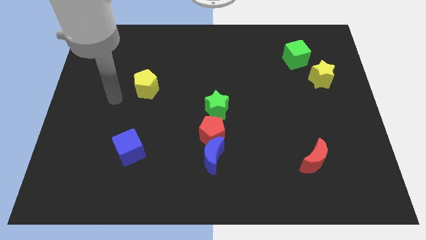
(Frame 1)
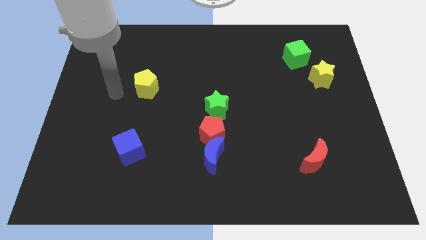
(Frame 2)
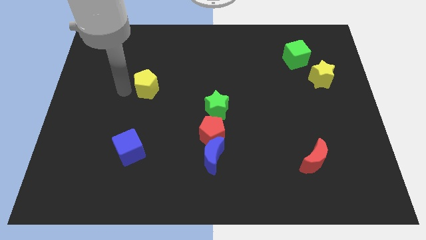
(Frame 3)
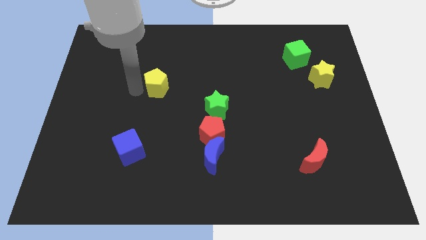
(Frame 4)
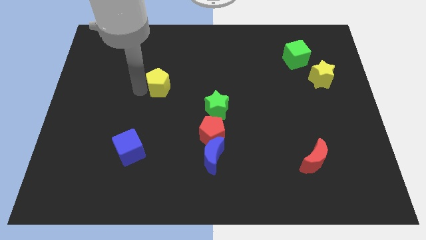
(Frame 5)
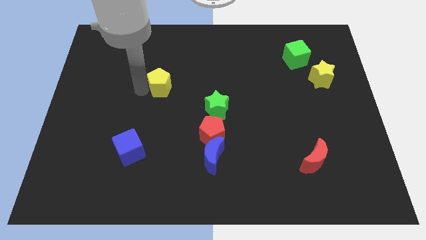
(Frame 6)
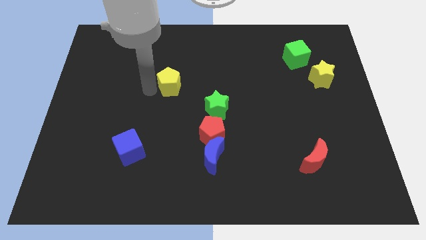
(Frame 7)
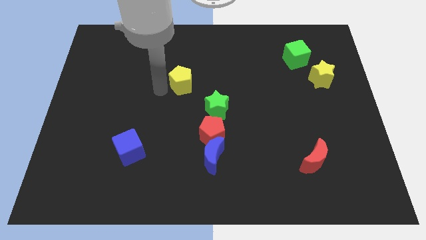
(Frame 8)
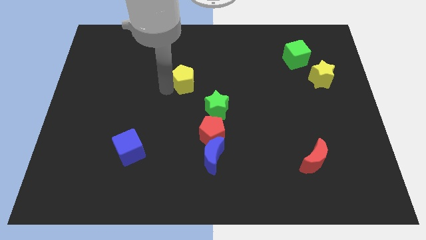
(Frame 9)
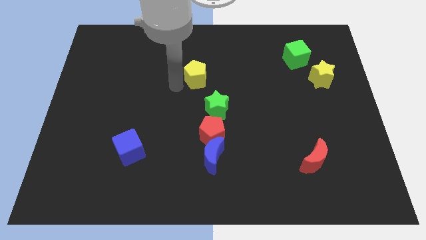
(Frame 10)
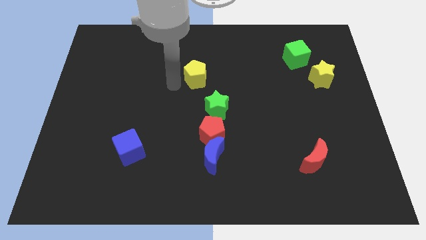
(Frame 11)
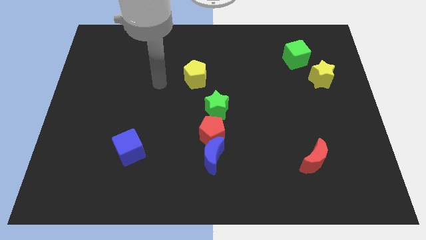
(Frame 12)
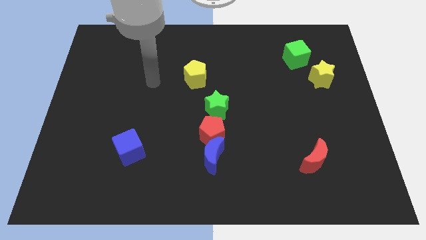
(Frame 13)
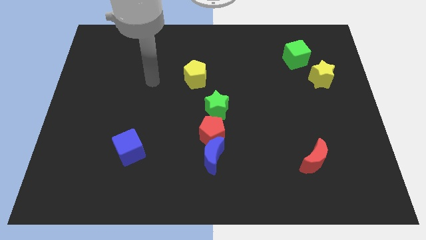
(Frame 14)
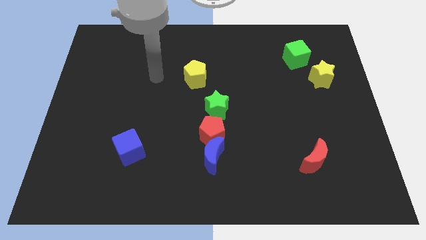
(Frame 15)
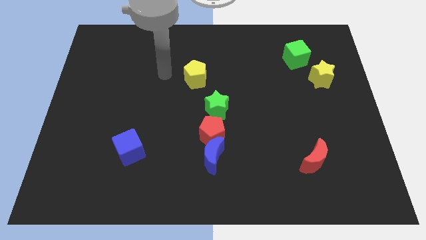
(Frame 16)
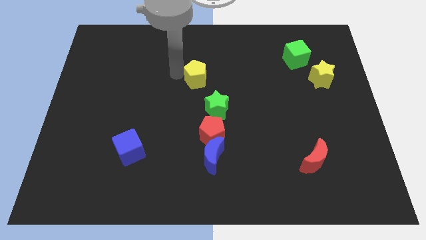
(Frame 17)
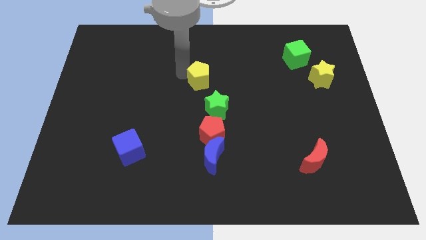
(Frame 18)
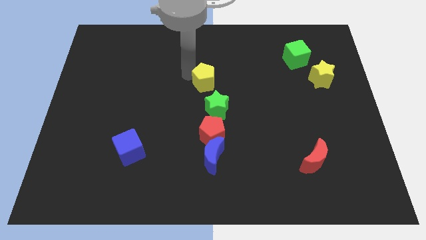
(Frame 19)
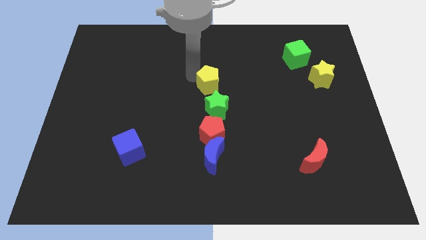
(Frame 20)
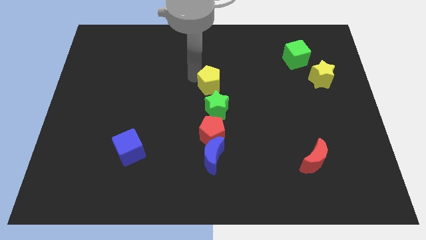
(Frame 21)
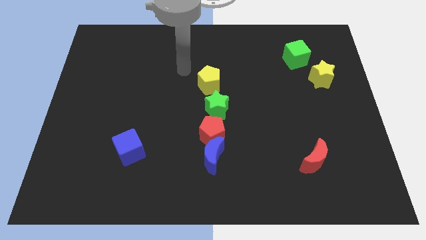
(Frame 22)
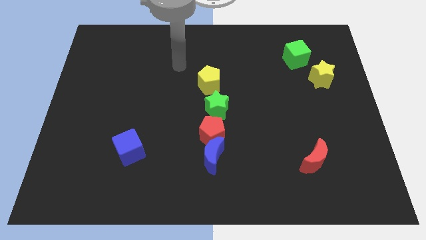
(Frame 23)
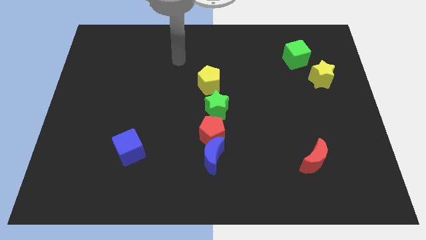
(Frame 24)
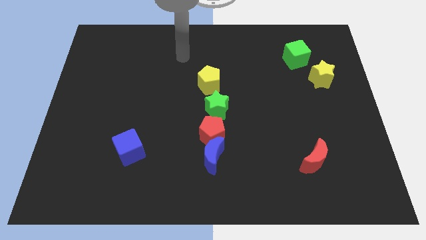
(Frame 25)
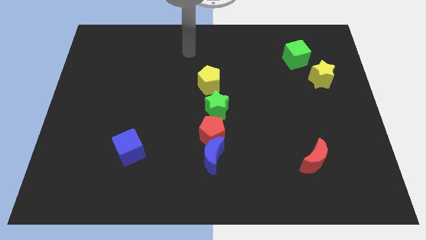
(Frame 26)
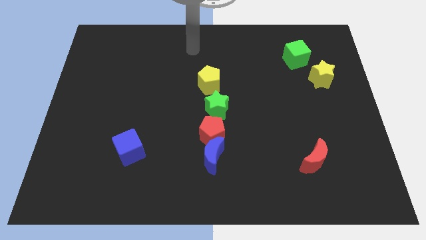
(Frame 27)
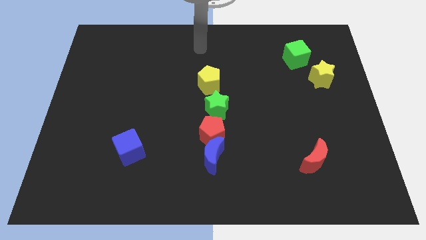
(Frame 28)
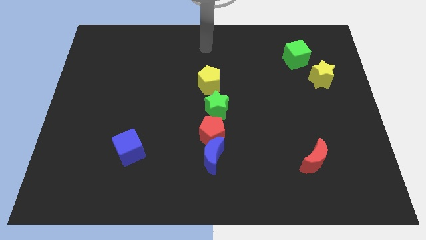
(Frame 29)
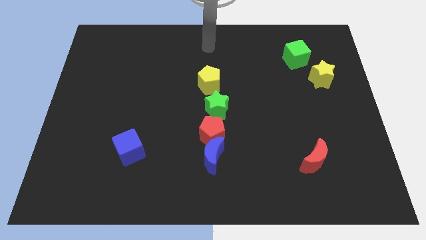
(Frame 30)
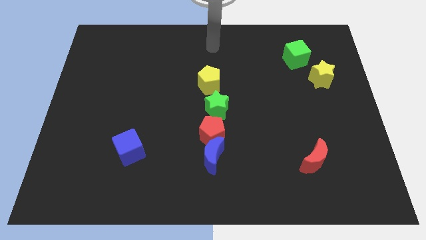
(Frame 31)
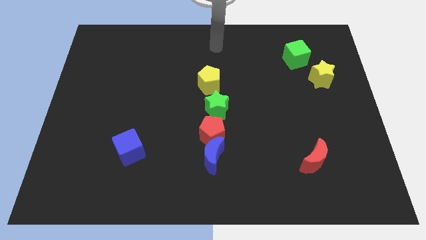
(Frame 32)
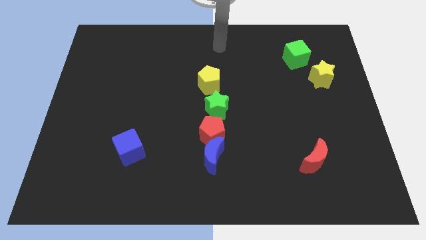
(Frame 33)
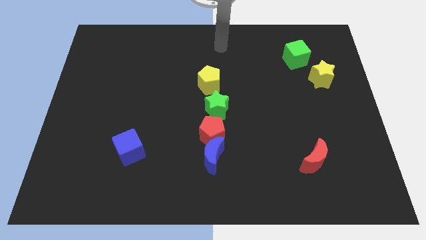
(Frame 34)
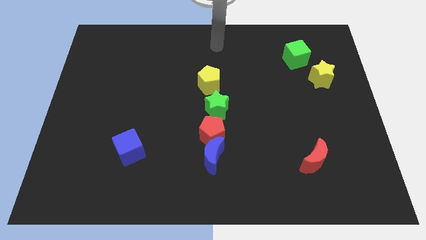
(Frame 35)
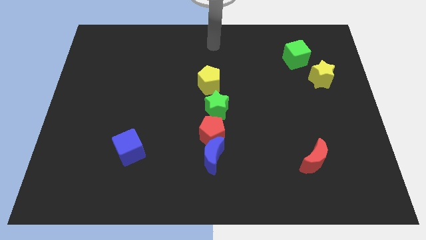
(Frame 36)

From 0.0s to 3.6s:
put yellow pentagon above green star

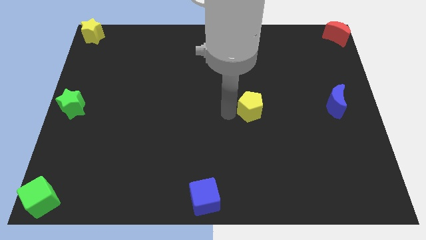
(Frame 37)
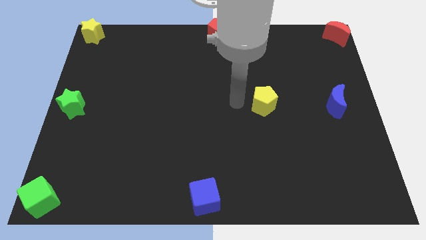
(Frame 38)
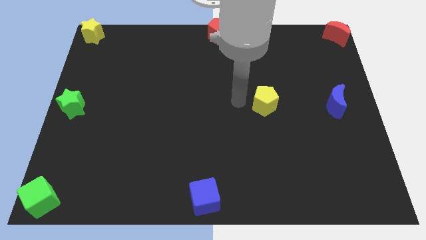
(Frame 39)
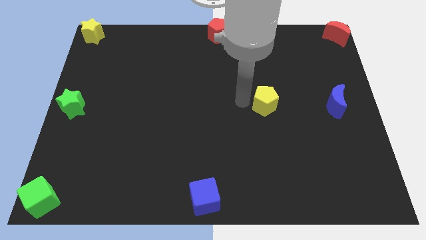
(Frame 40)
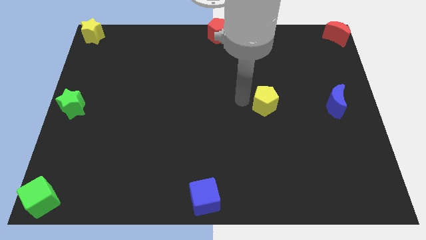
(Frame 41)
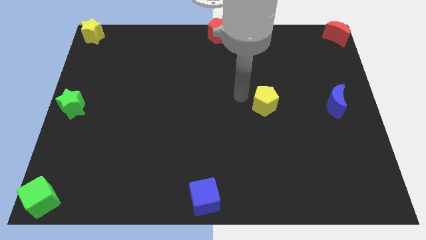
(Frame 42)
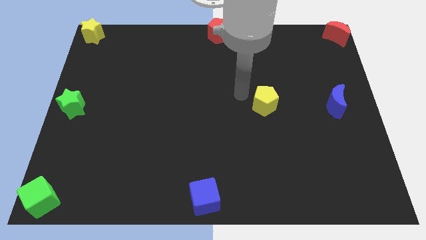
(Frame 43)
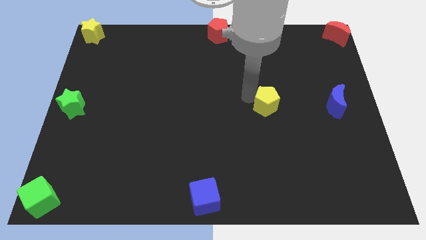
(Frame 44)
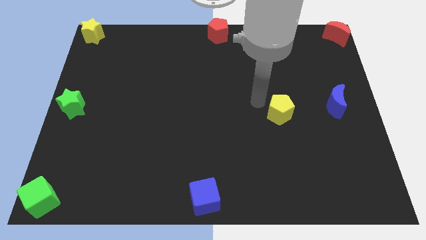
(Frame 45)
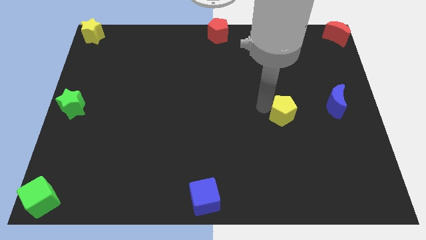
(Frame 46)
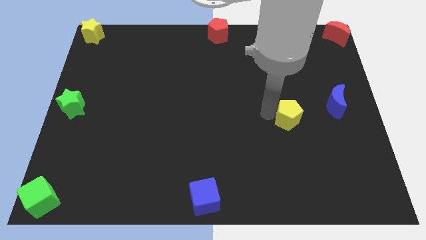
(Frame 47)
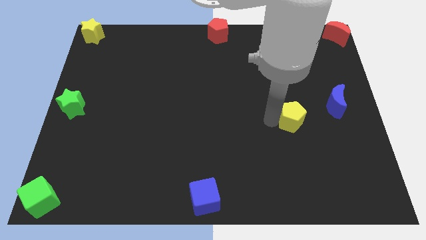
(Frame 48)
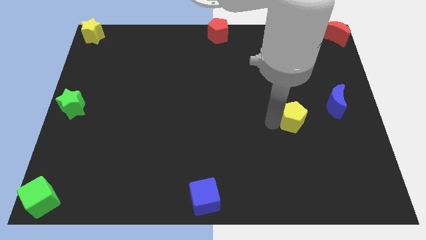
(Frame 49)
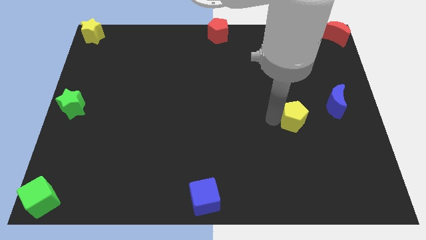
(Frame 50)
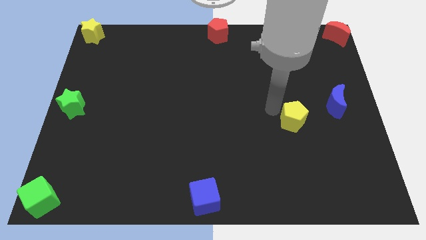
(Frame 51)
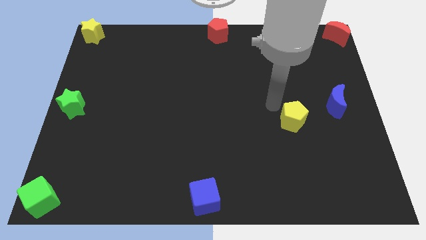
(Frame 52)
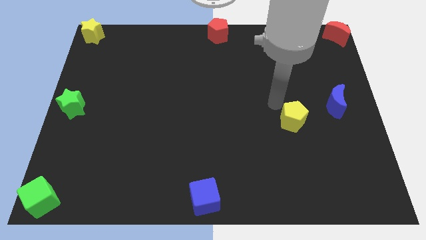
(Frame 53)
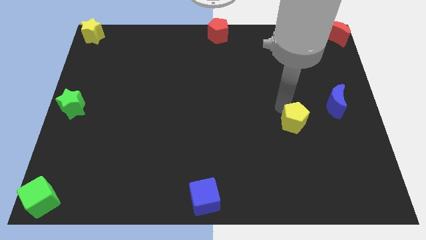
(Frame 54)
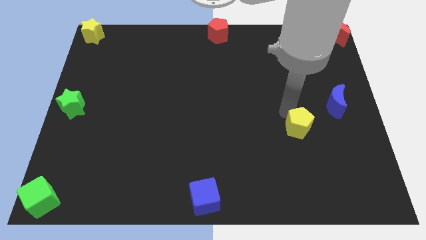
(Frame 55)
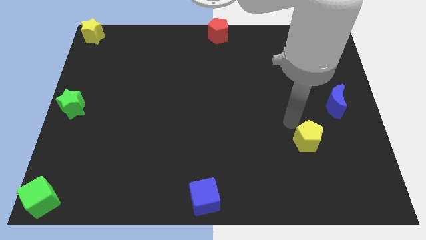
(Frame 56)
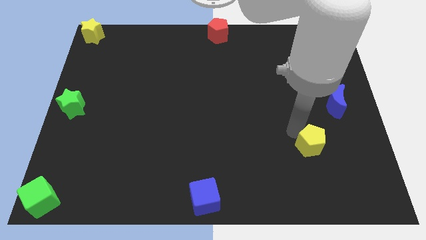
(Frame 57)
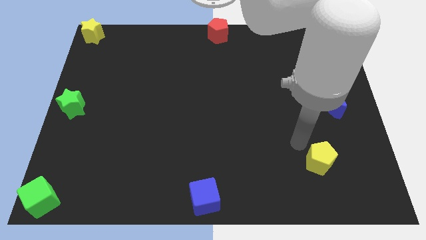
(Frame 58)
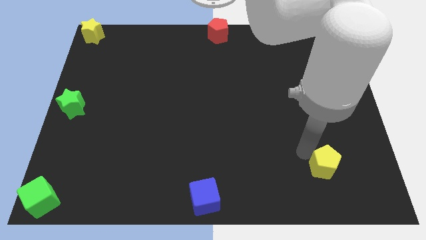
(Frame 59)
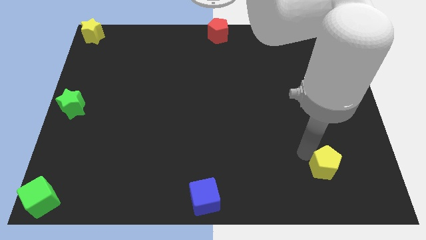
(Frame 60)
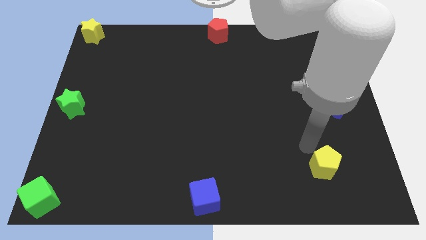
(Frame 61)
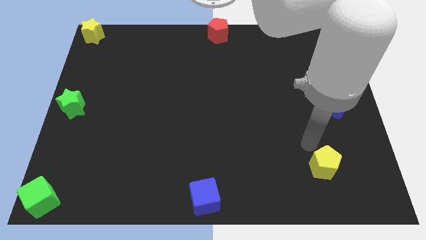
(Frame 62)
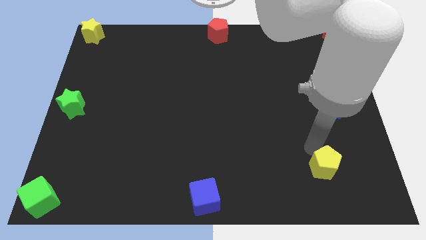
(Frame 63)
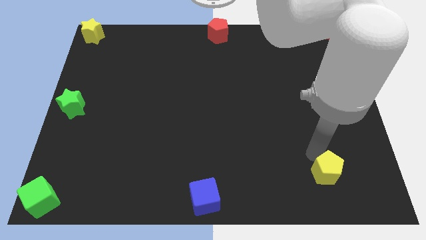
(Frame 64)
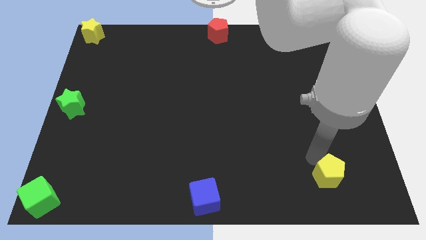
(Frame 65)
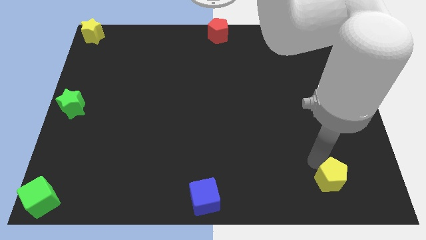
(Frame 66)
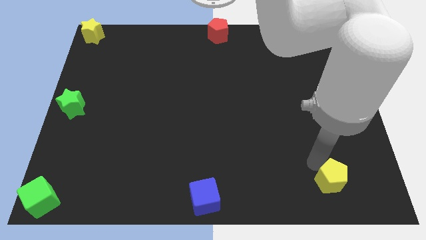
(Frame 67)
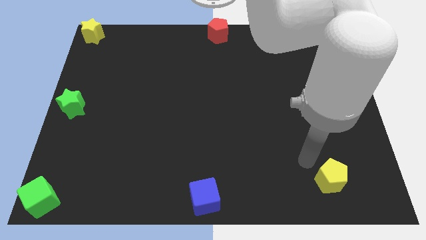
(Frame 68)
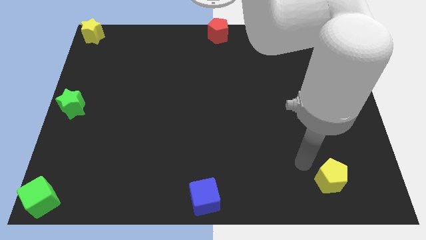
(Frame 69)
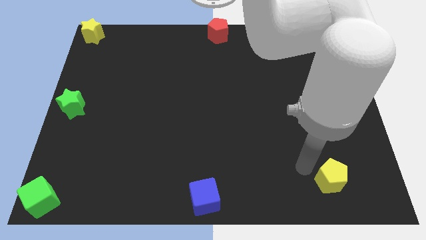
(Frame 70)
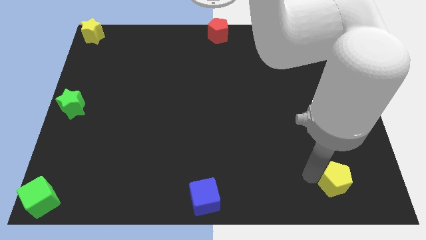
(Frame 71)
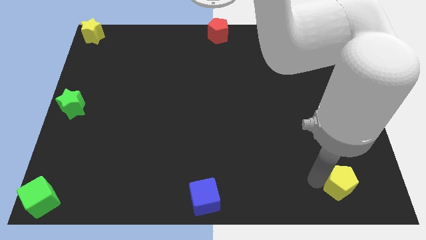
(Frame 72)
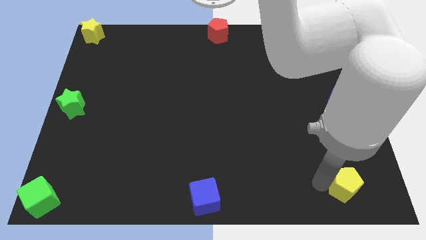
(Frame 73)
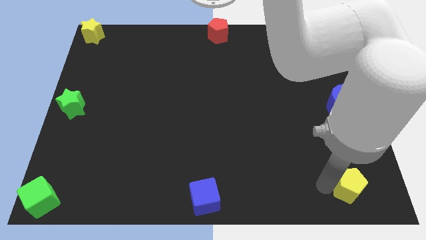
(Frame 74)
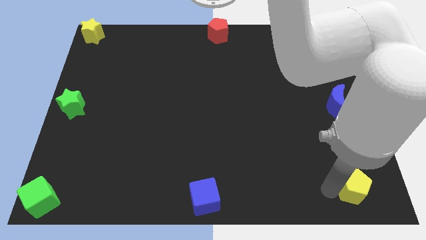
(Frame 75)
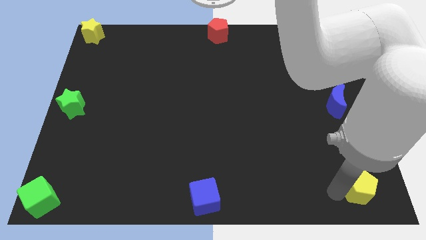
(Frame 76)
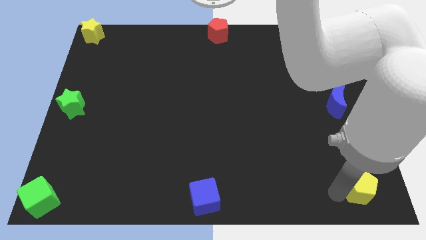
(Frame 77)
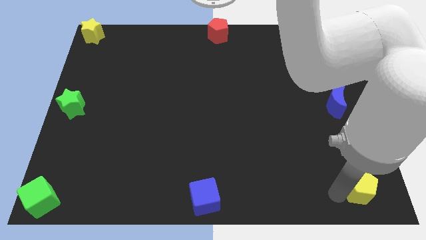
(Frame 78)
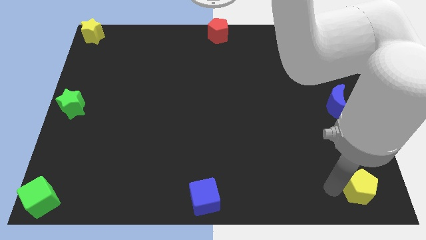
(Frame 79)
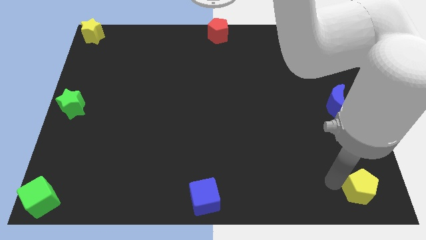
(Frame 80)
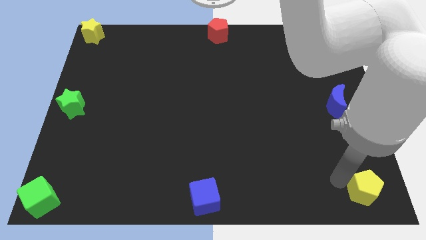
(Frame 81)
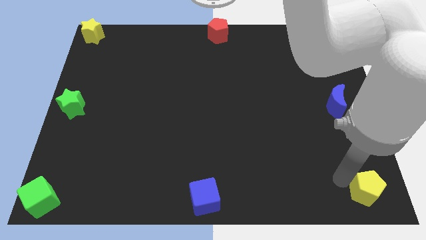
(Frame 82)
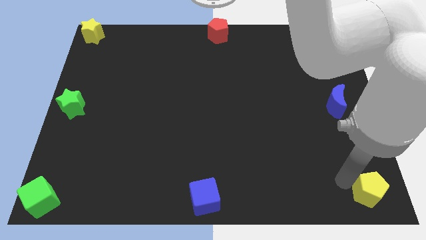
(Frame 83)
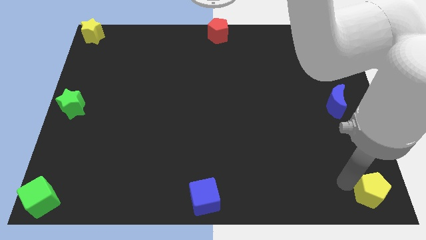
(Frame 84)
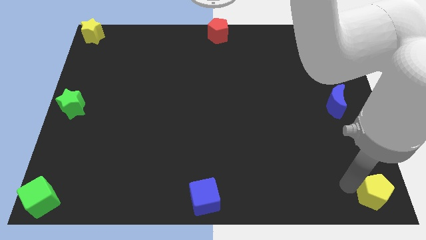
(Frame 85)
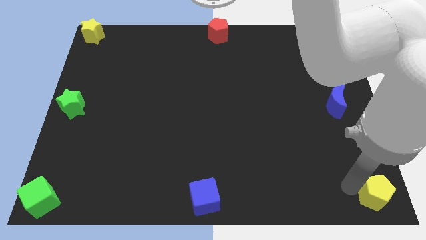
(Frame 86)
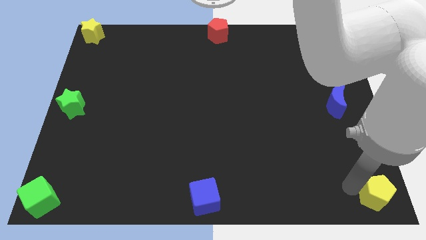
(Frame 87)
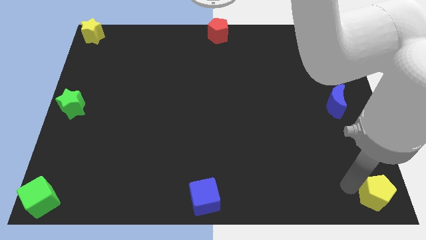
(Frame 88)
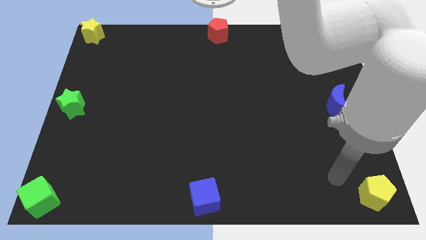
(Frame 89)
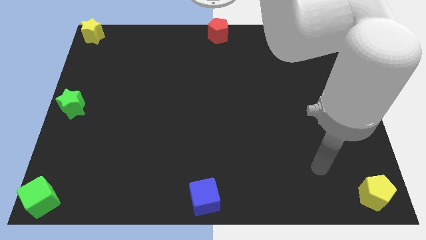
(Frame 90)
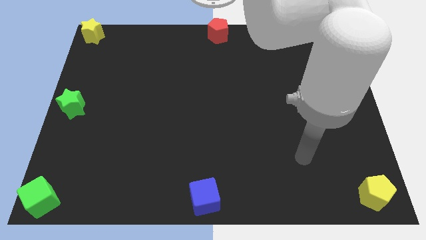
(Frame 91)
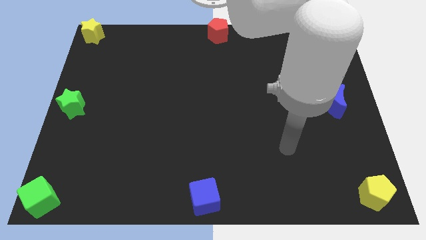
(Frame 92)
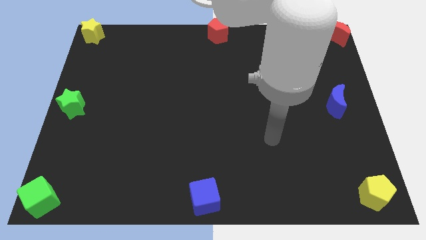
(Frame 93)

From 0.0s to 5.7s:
put the yellow pentagon towards the right bottom corner
